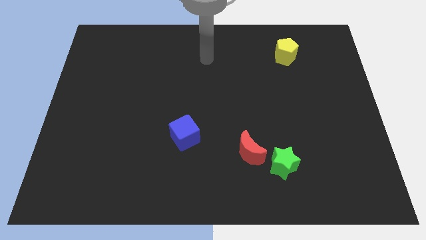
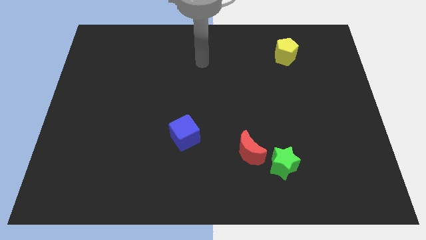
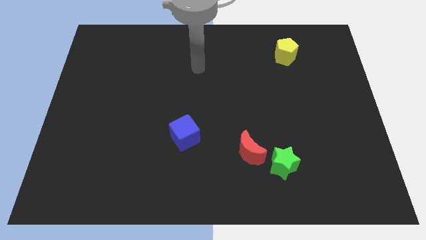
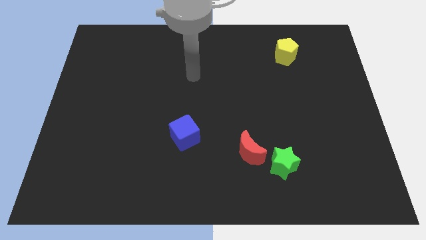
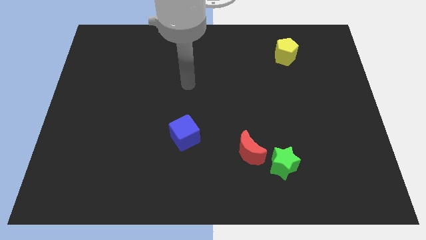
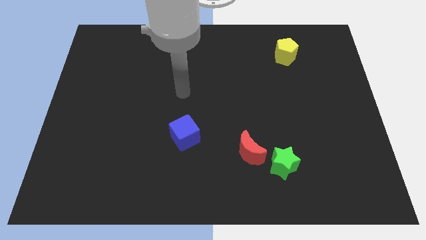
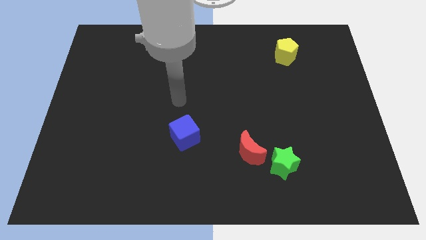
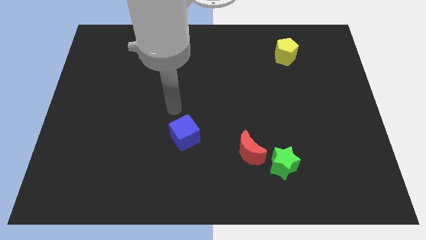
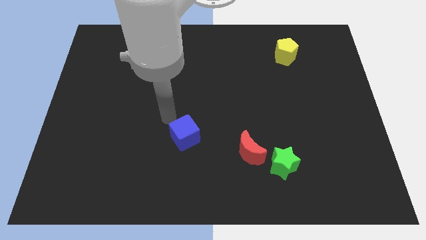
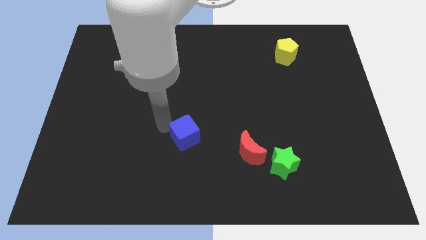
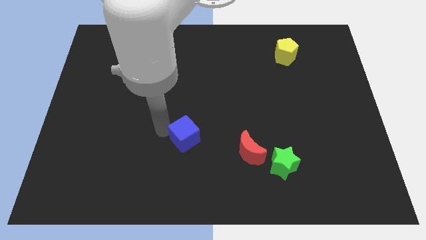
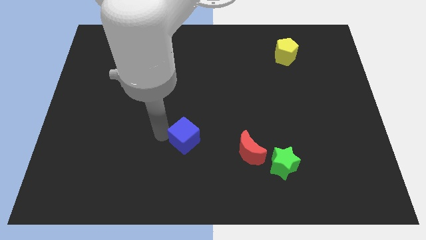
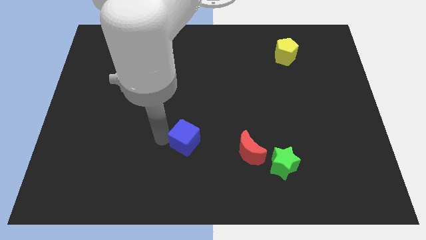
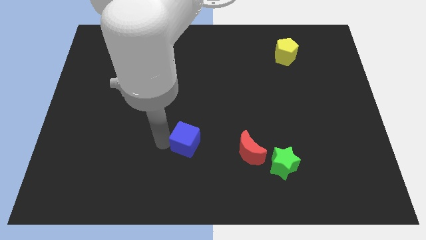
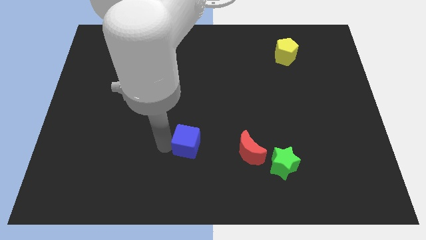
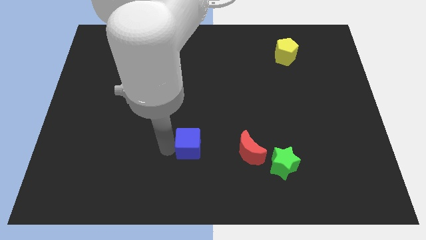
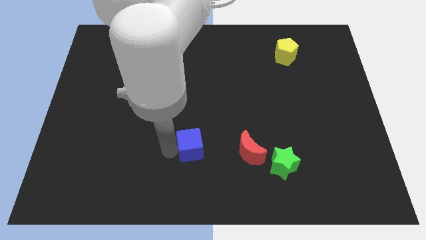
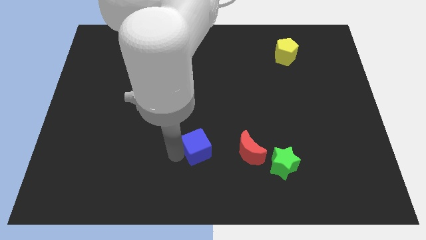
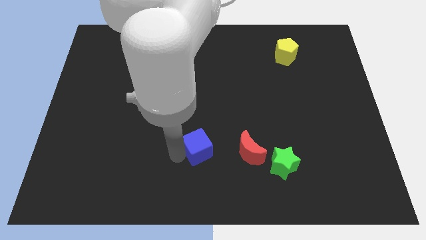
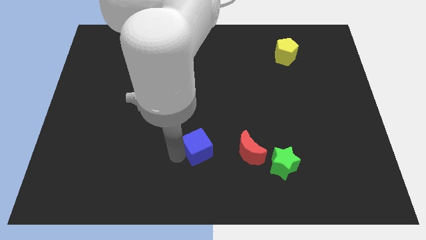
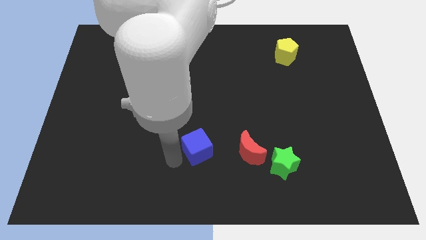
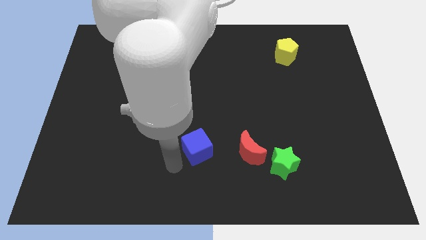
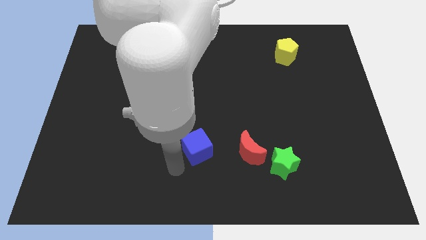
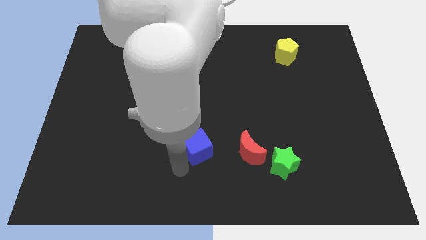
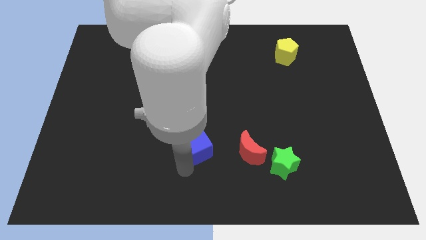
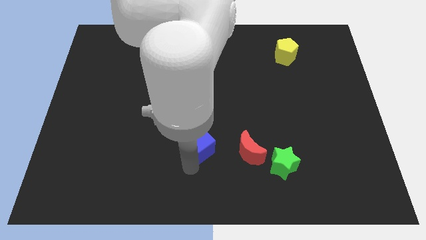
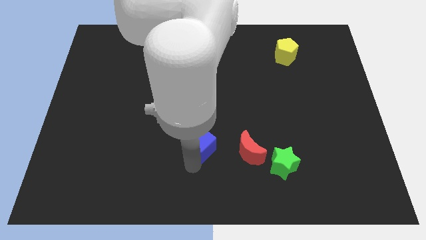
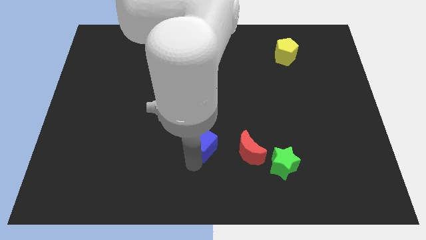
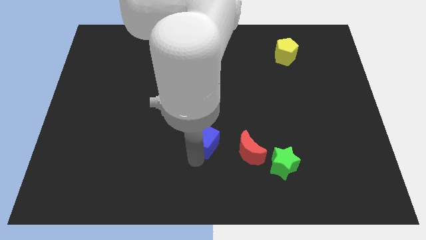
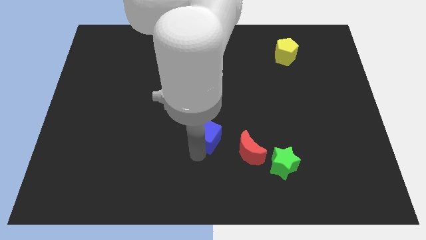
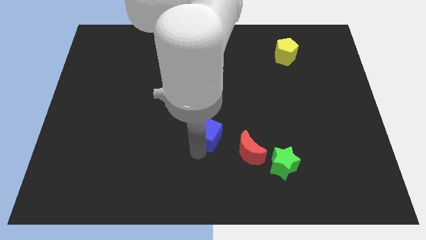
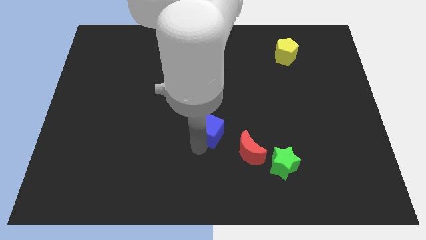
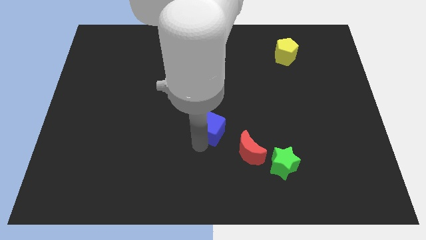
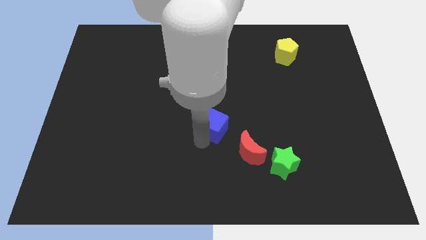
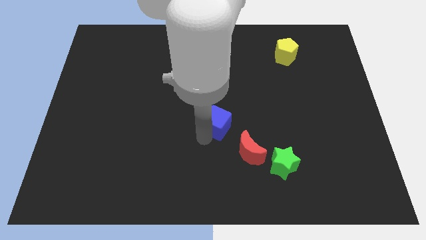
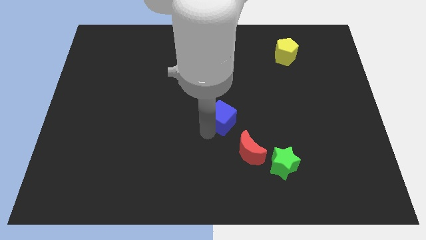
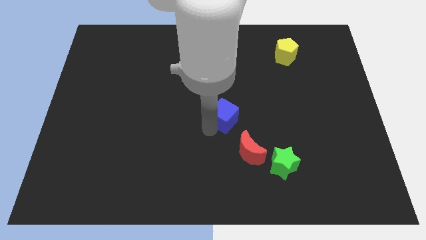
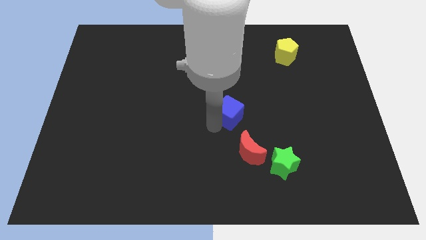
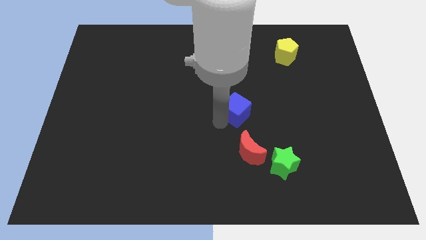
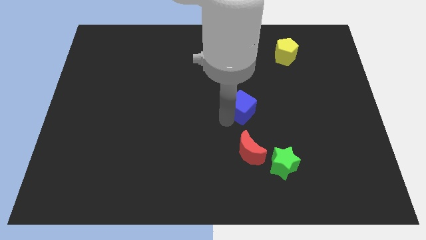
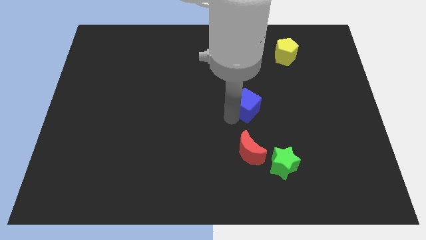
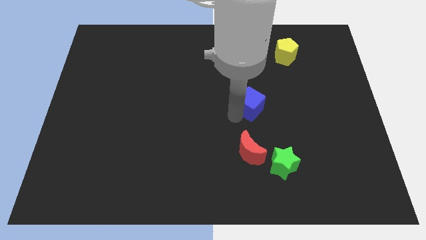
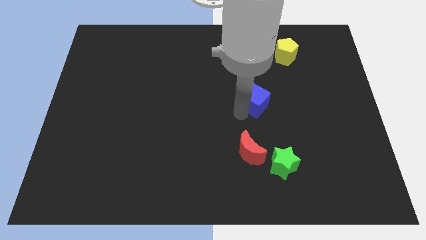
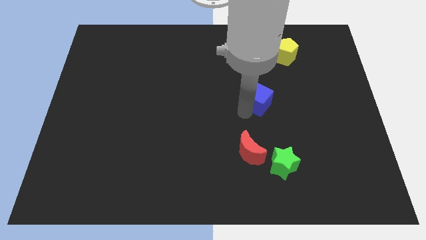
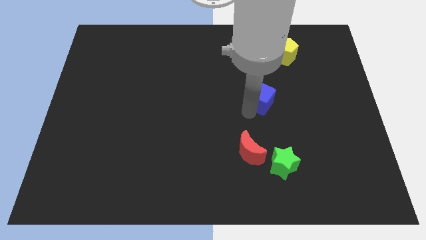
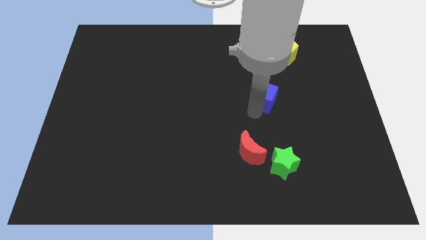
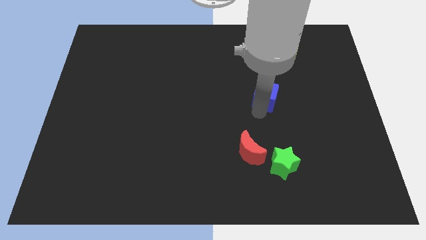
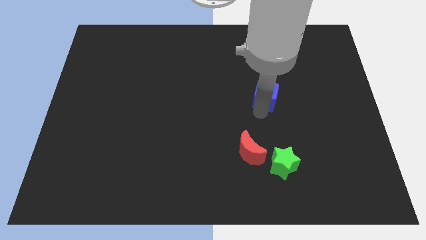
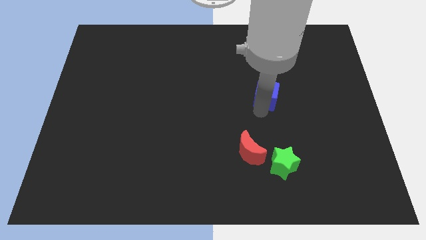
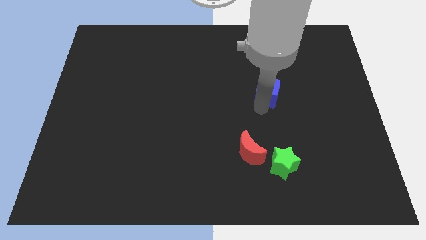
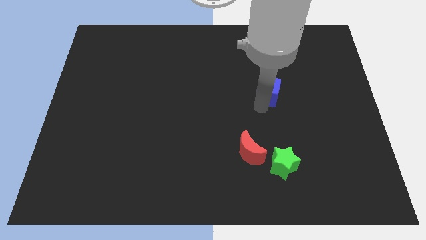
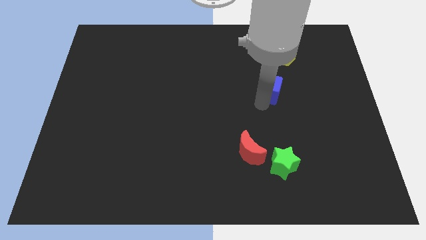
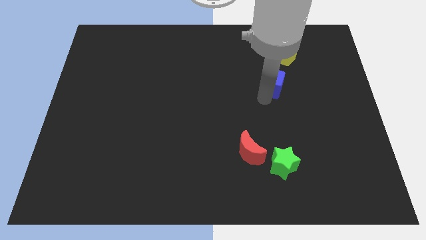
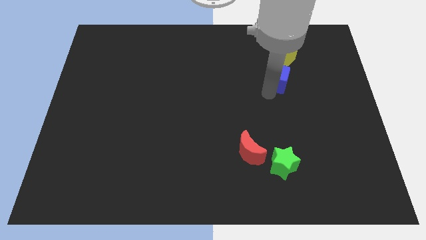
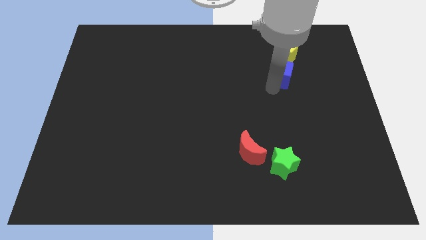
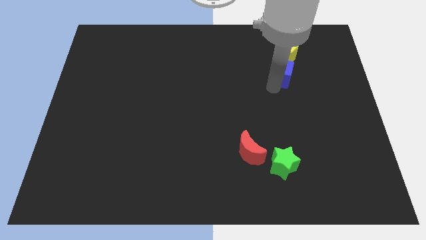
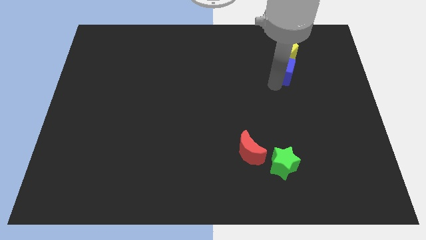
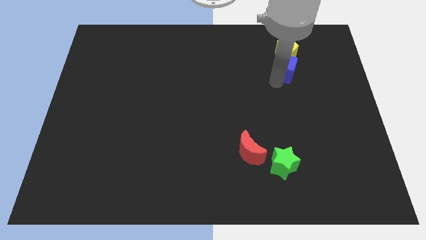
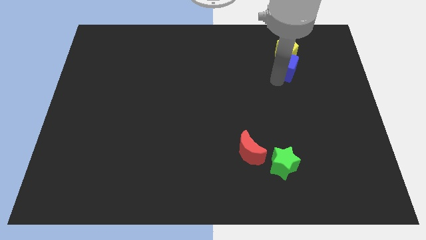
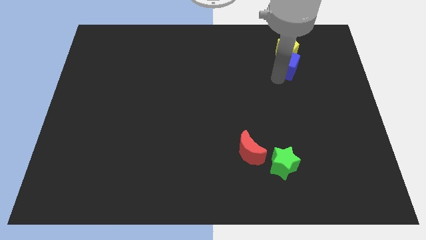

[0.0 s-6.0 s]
push the blue cube close to the pentagon

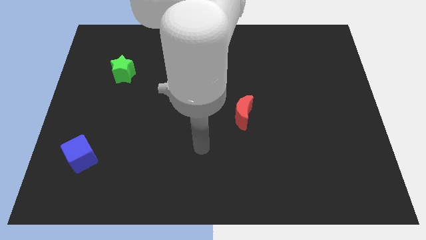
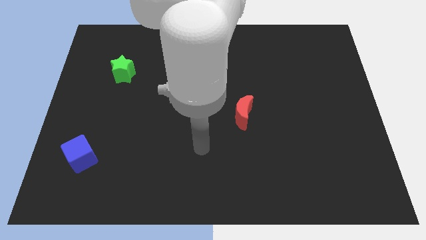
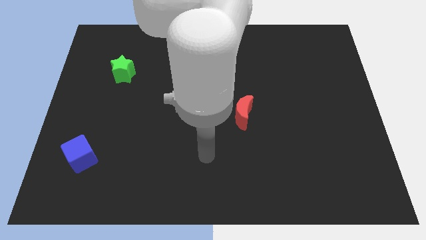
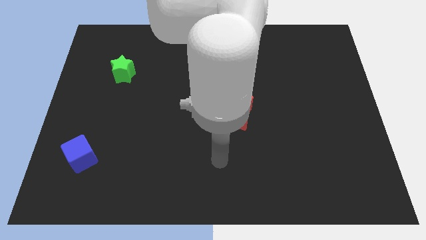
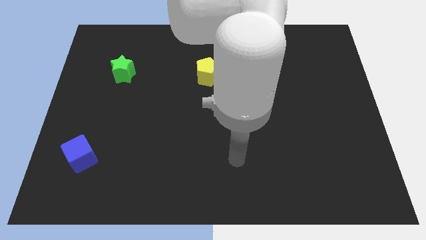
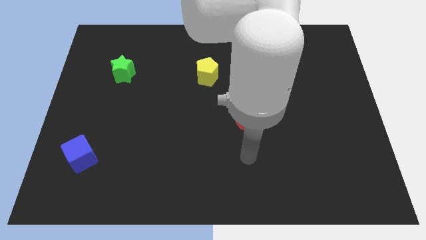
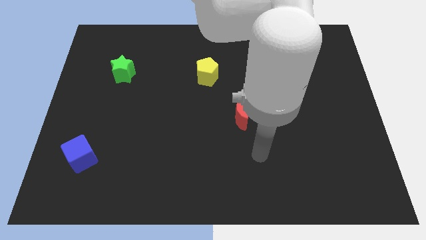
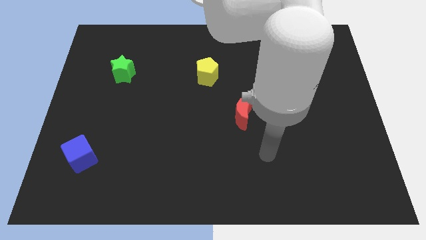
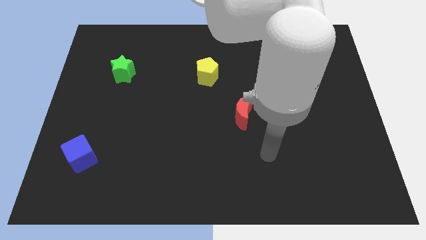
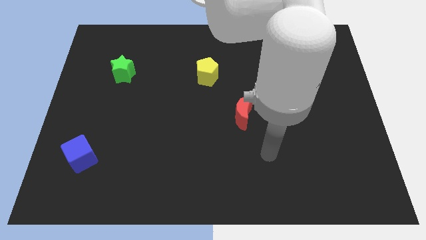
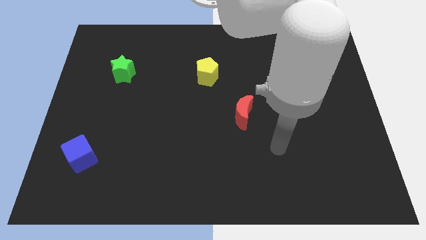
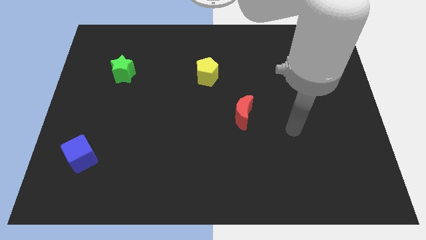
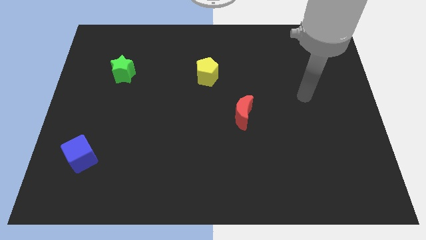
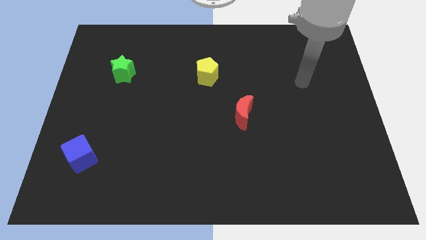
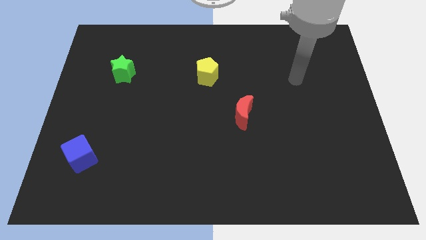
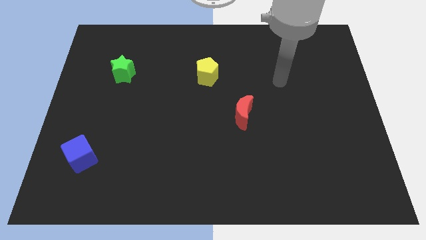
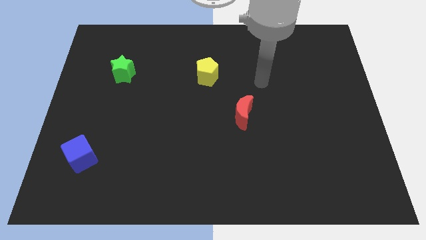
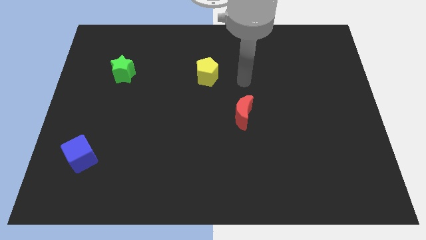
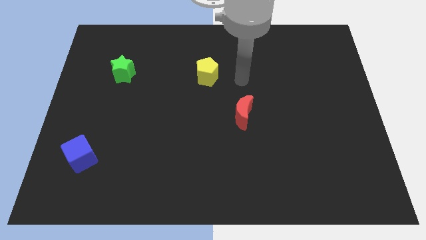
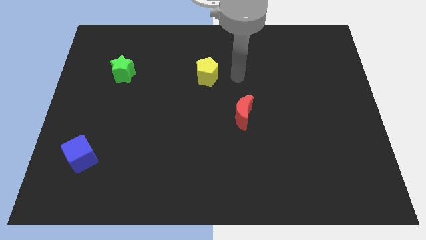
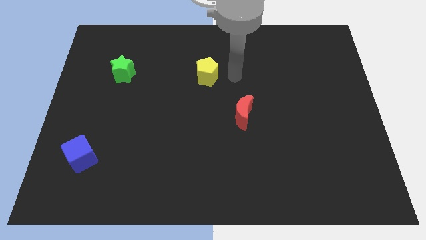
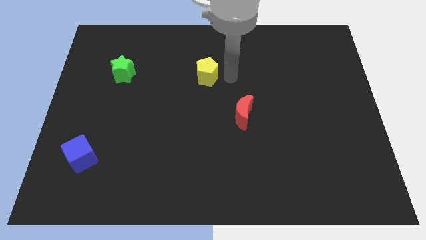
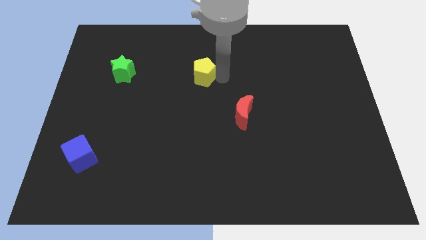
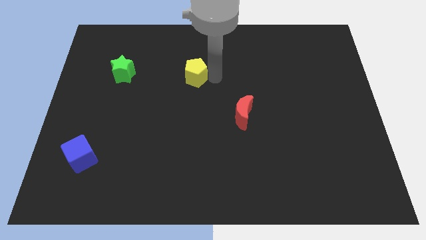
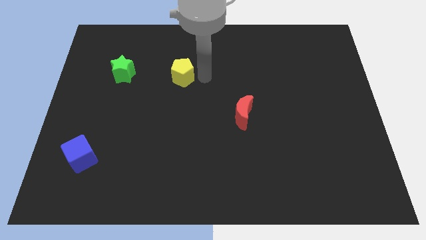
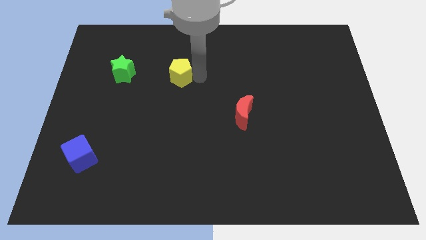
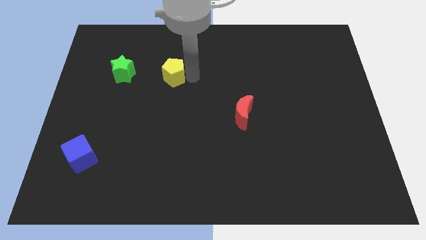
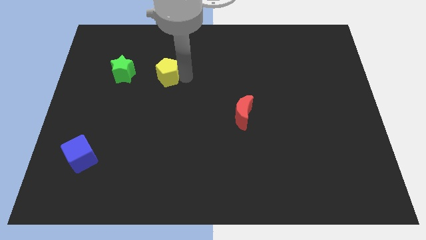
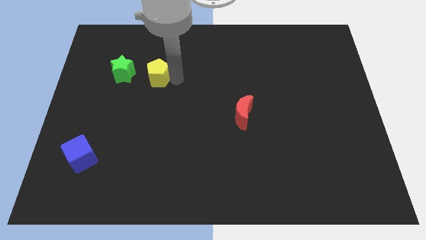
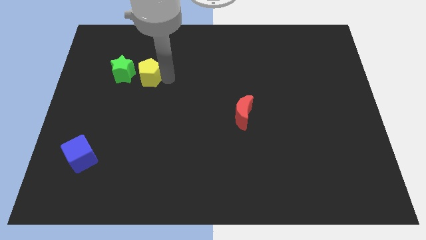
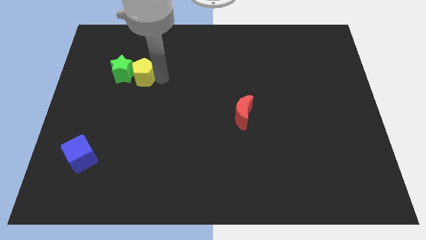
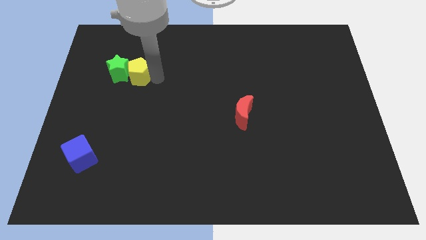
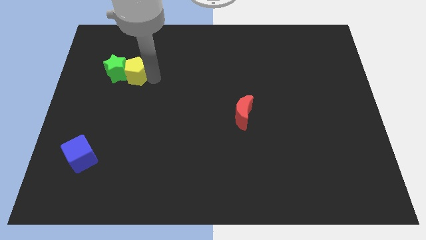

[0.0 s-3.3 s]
move the yellow pentagon to the green star
